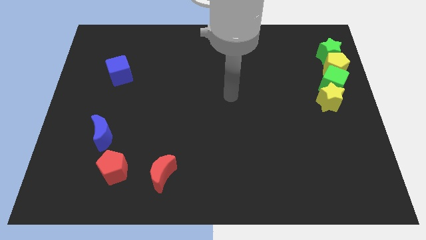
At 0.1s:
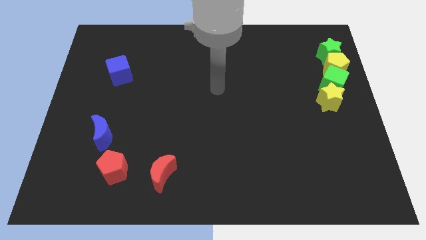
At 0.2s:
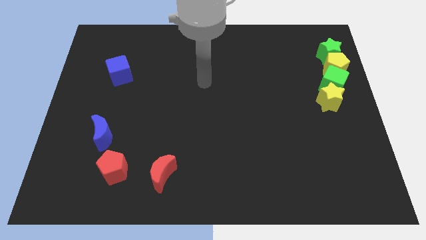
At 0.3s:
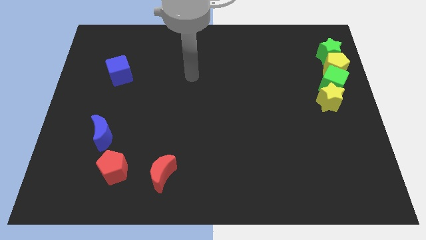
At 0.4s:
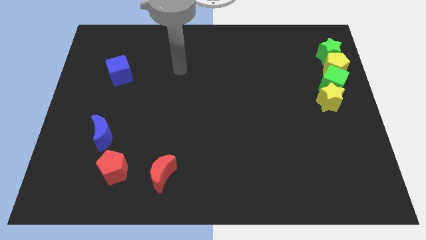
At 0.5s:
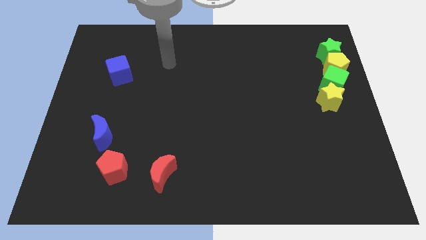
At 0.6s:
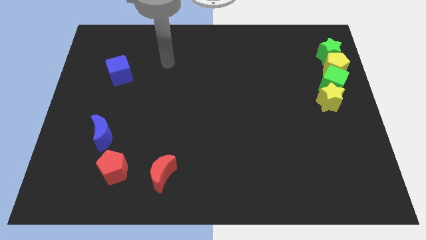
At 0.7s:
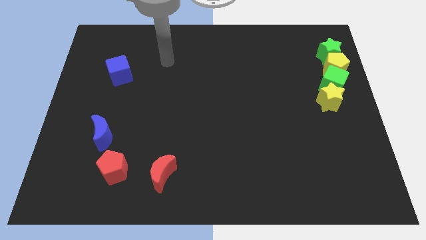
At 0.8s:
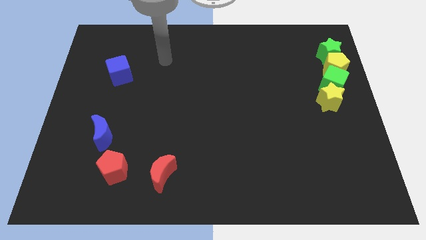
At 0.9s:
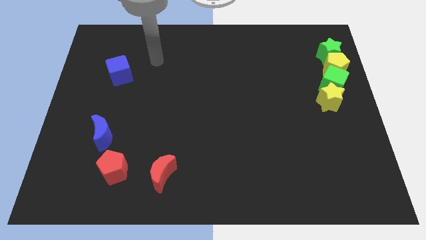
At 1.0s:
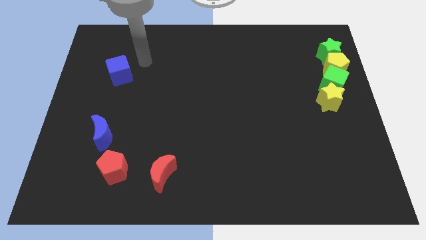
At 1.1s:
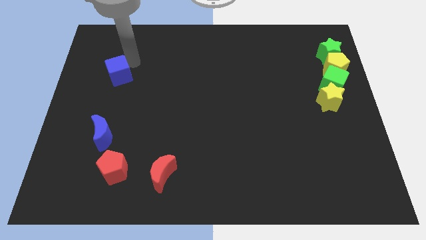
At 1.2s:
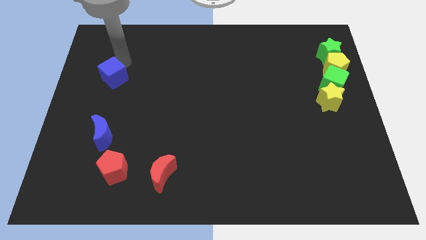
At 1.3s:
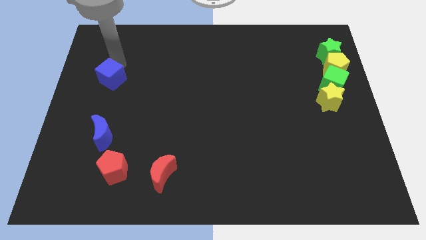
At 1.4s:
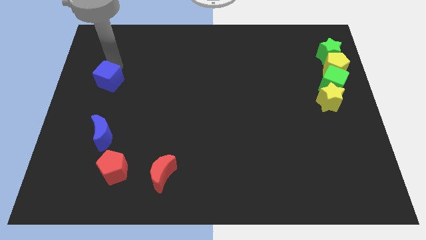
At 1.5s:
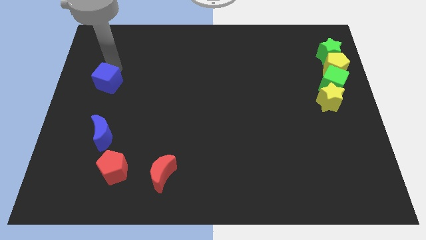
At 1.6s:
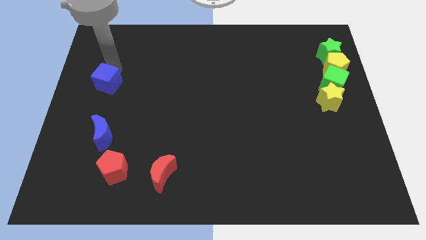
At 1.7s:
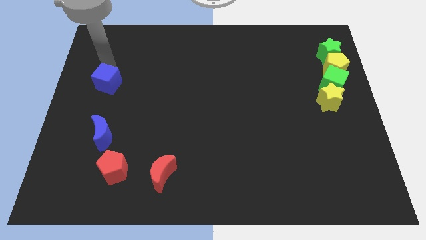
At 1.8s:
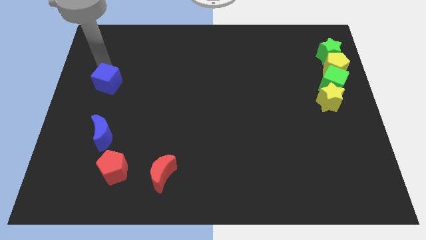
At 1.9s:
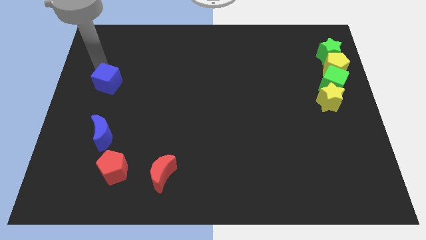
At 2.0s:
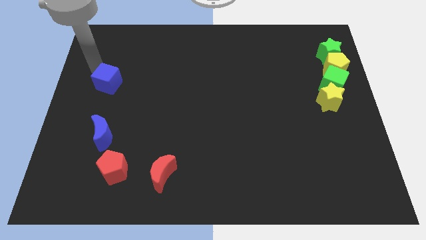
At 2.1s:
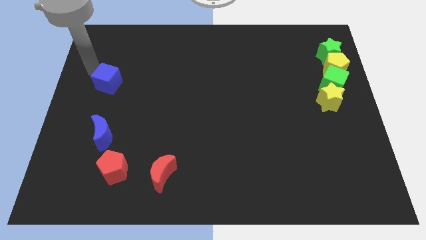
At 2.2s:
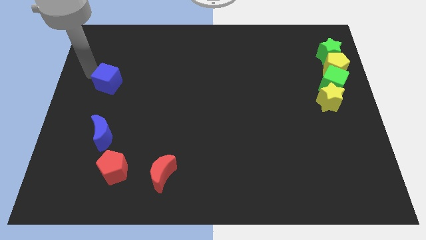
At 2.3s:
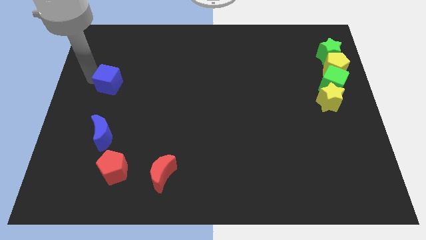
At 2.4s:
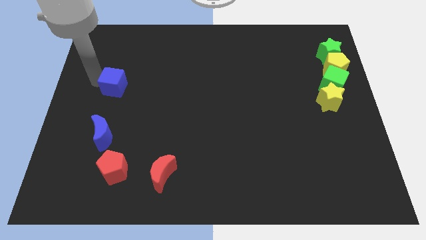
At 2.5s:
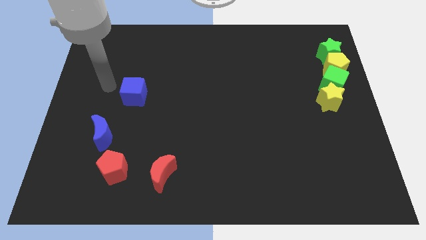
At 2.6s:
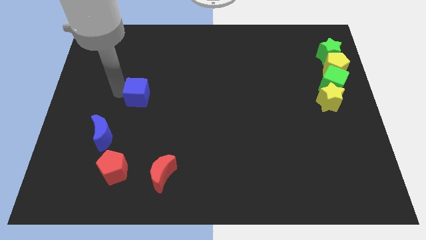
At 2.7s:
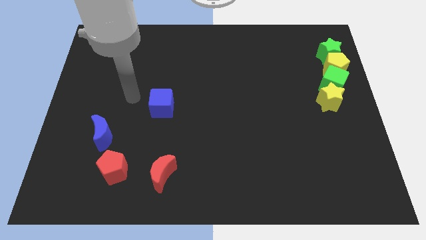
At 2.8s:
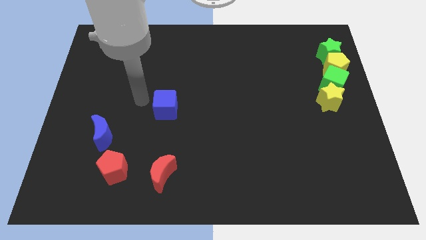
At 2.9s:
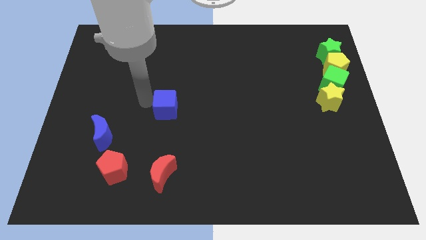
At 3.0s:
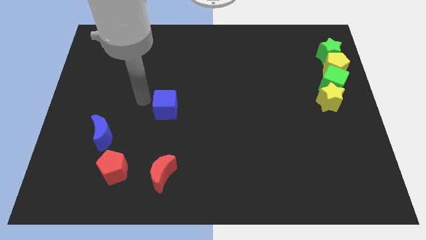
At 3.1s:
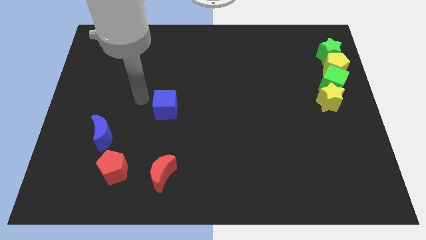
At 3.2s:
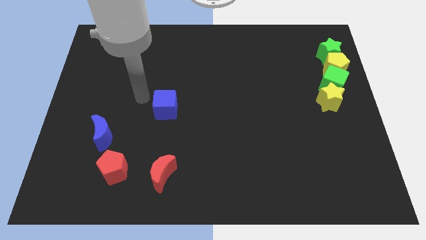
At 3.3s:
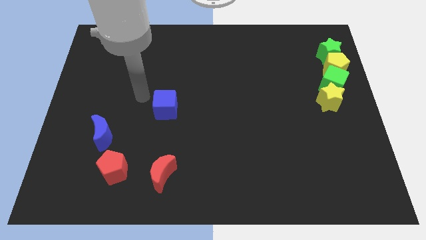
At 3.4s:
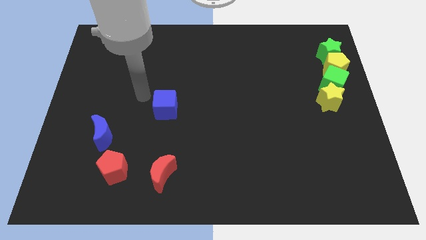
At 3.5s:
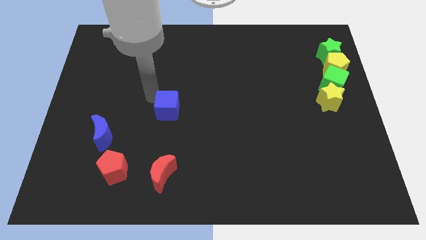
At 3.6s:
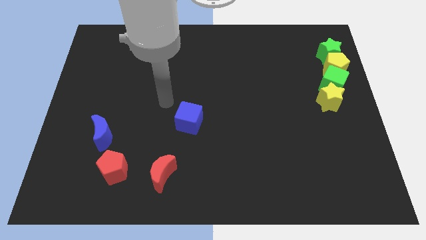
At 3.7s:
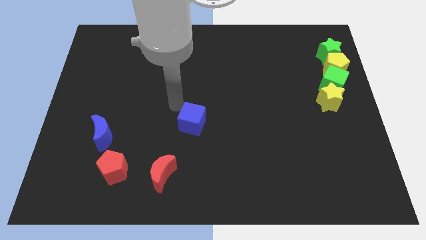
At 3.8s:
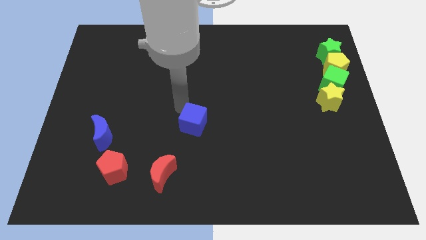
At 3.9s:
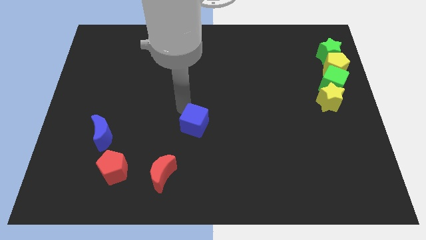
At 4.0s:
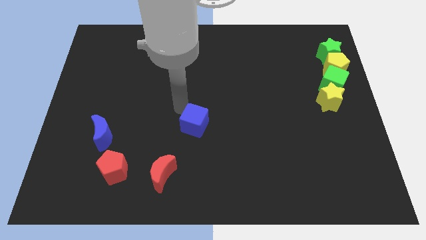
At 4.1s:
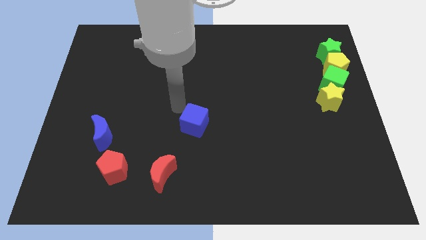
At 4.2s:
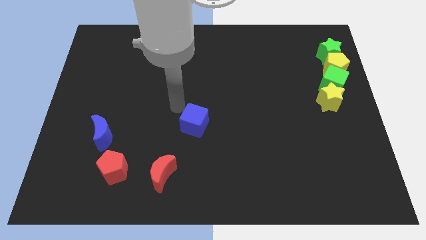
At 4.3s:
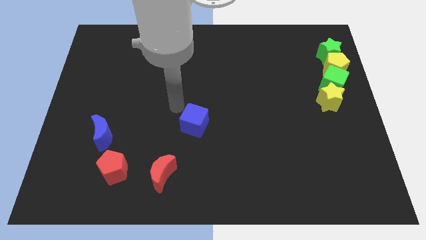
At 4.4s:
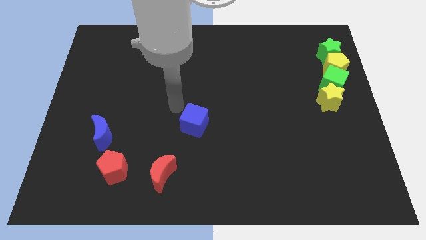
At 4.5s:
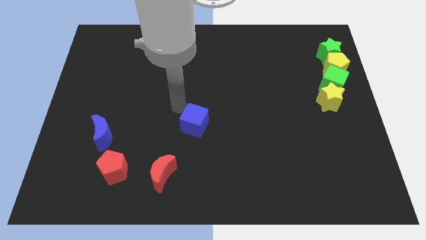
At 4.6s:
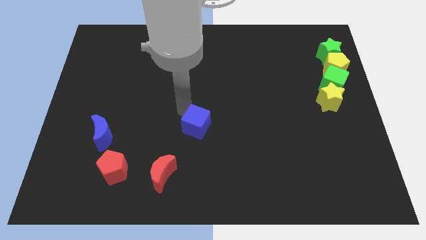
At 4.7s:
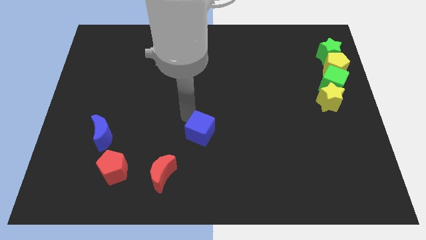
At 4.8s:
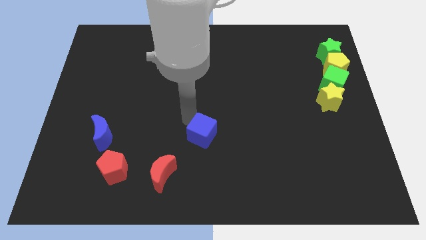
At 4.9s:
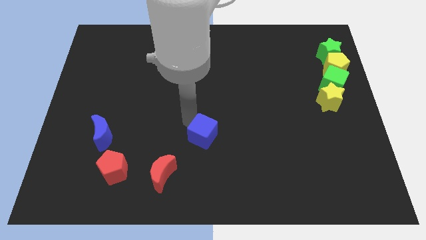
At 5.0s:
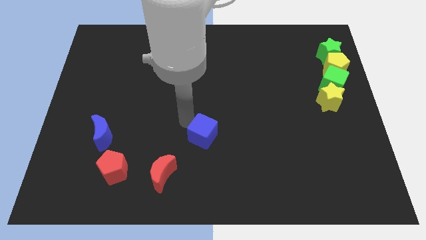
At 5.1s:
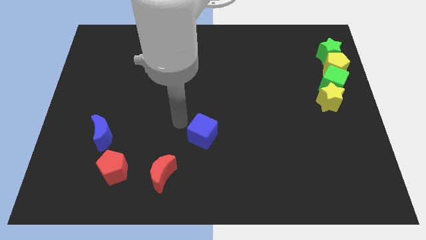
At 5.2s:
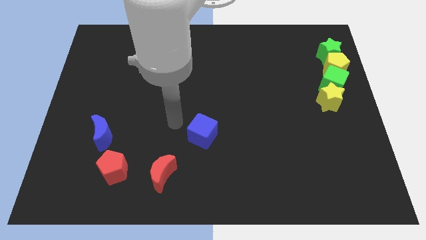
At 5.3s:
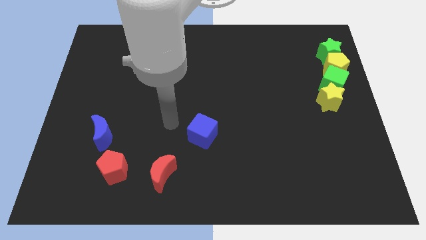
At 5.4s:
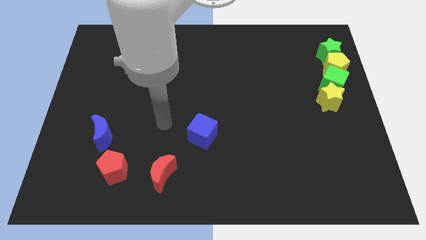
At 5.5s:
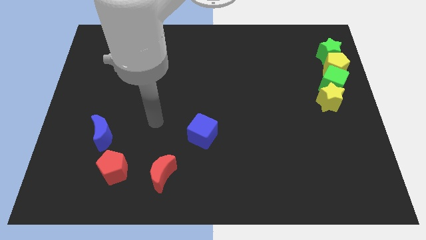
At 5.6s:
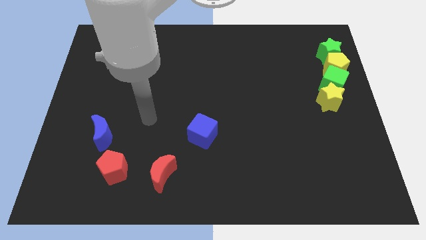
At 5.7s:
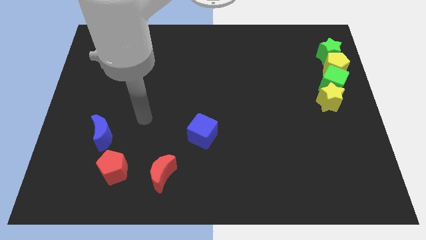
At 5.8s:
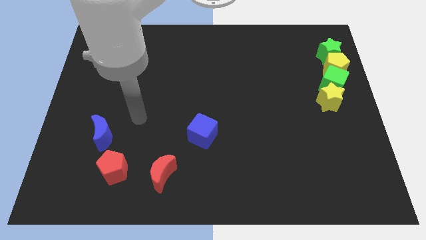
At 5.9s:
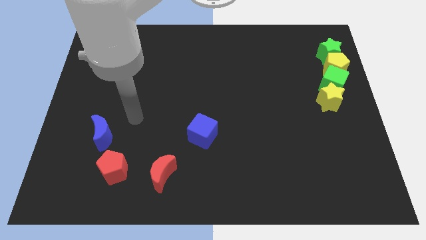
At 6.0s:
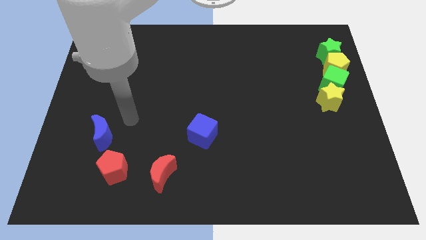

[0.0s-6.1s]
place the blue cube parallel to the right of the blue crescent

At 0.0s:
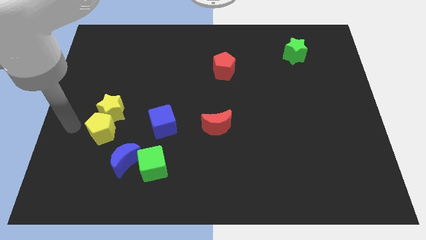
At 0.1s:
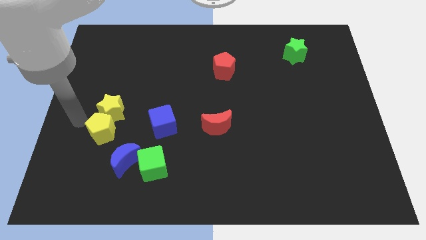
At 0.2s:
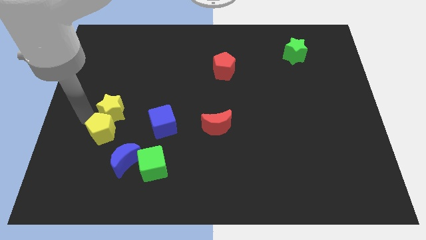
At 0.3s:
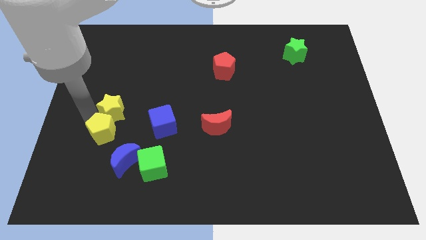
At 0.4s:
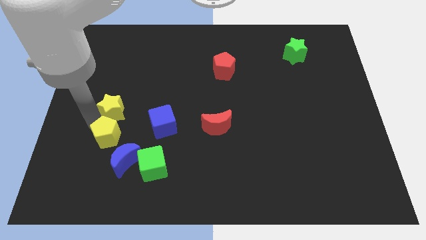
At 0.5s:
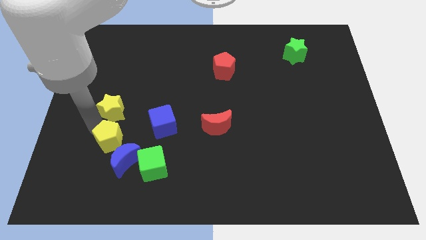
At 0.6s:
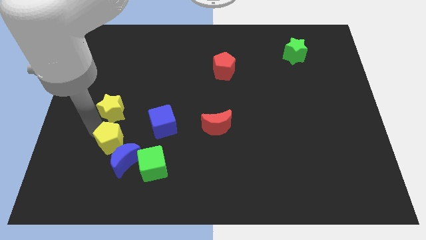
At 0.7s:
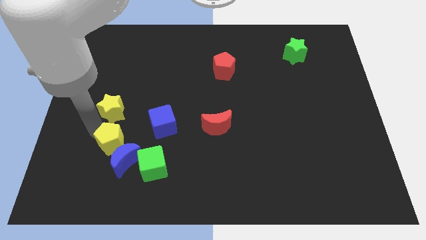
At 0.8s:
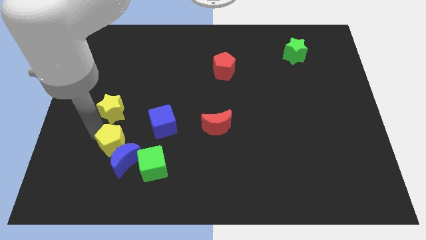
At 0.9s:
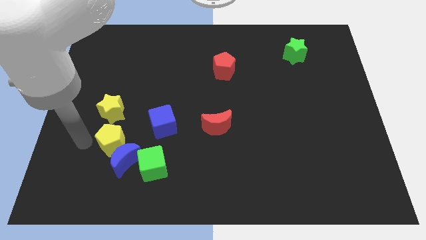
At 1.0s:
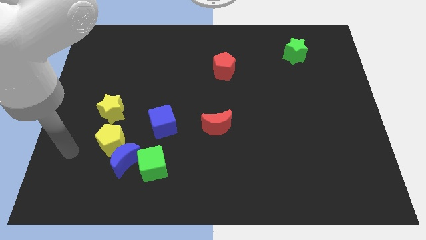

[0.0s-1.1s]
move yellow pentagon towards blue moon

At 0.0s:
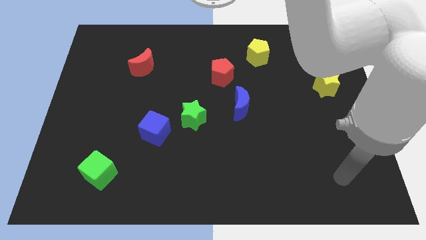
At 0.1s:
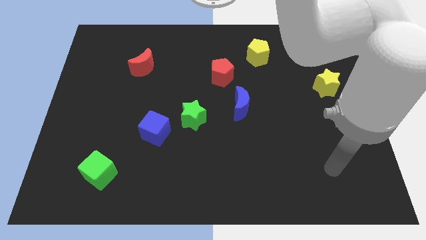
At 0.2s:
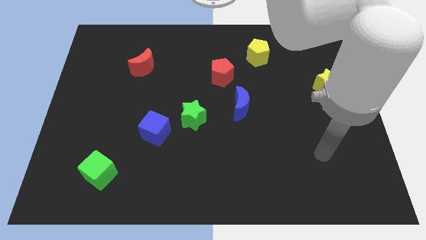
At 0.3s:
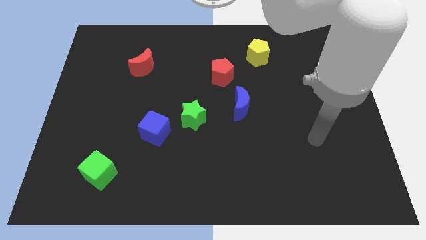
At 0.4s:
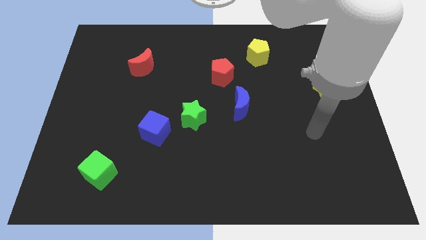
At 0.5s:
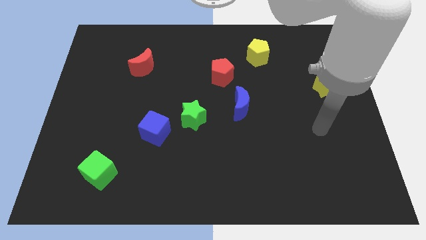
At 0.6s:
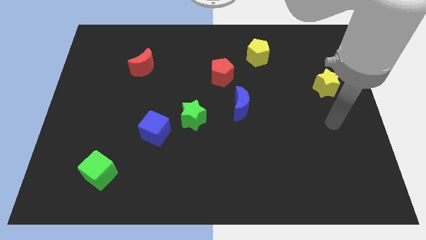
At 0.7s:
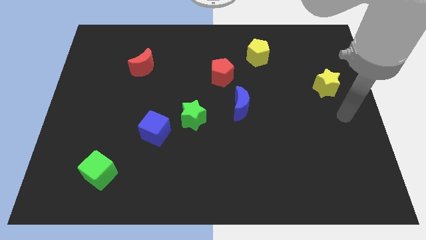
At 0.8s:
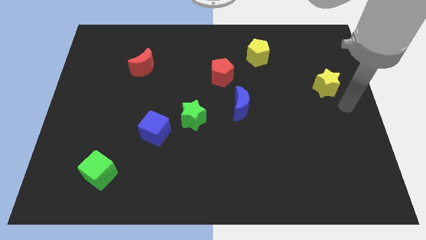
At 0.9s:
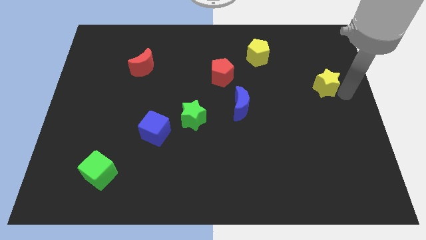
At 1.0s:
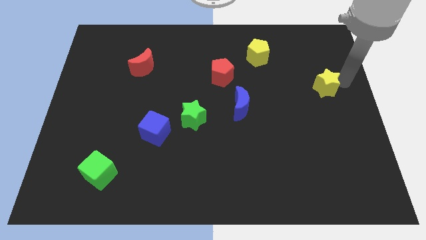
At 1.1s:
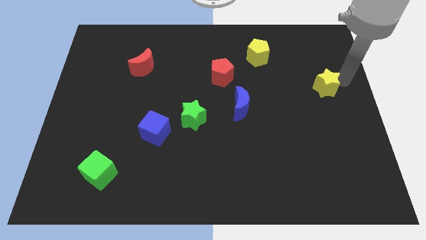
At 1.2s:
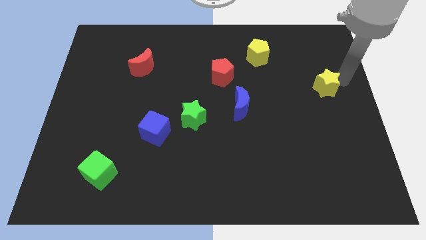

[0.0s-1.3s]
move the arm towards the right to yellow star

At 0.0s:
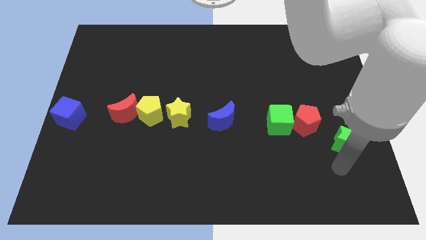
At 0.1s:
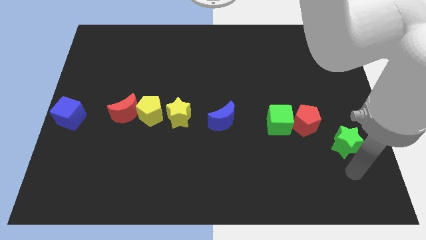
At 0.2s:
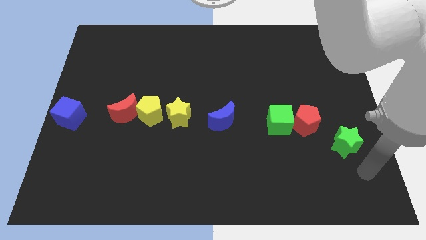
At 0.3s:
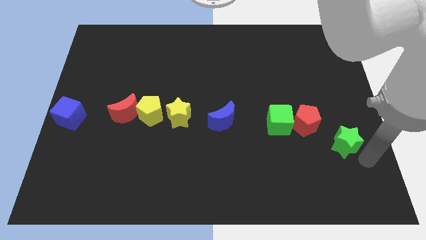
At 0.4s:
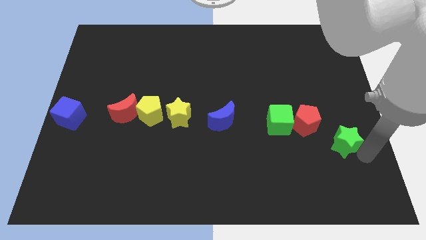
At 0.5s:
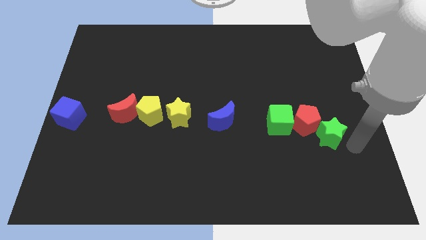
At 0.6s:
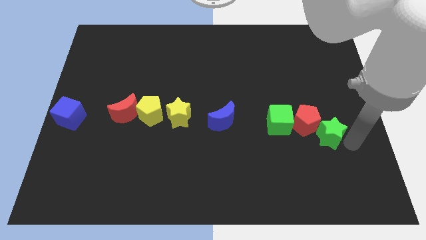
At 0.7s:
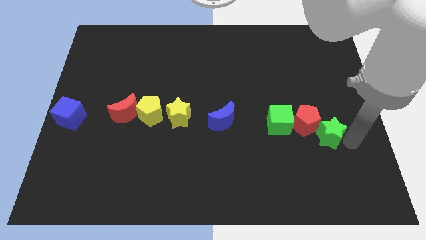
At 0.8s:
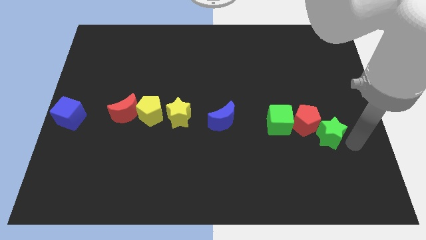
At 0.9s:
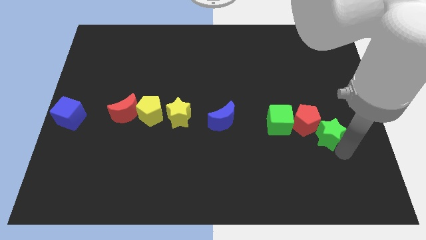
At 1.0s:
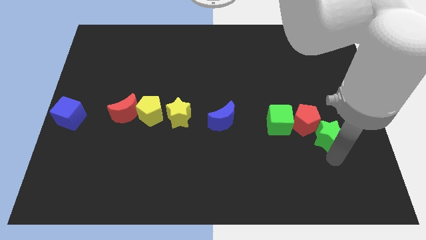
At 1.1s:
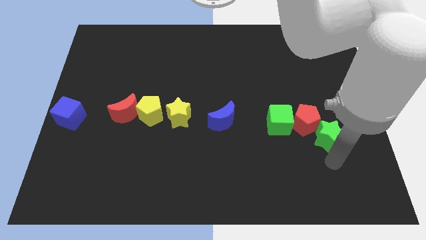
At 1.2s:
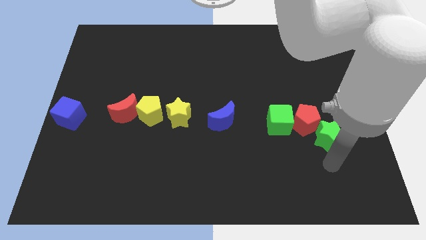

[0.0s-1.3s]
move the green star to the bottom right side of the red pentagon
